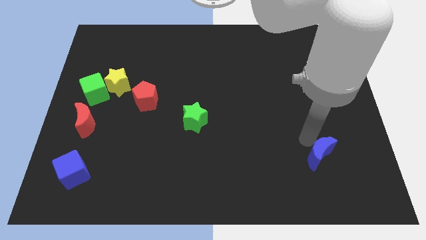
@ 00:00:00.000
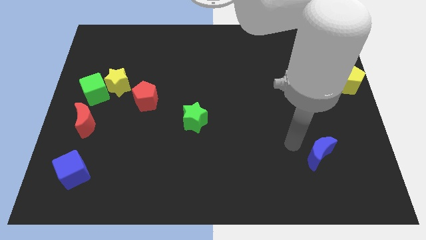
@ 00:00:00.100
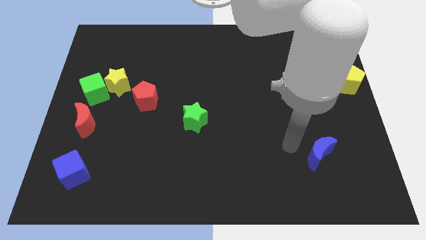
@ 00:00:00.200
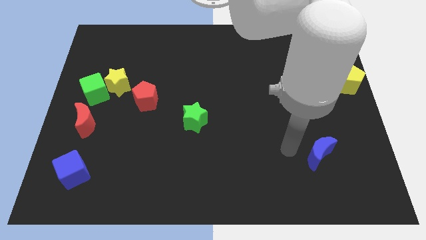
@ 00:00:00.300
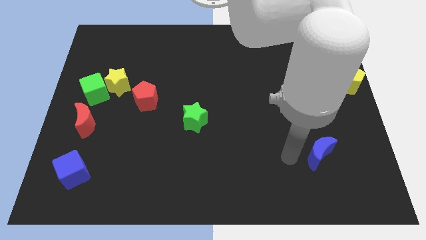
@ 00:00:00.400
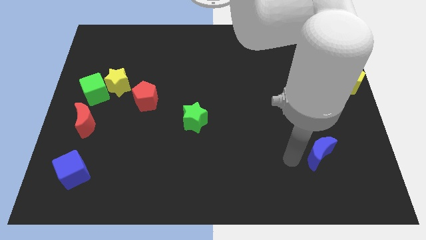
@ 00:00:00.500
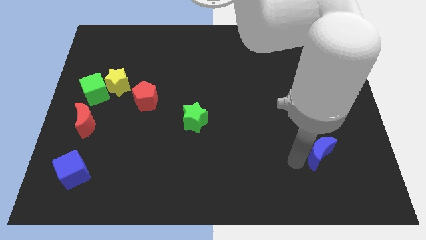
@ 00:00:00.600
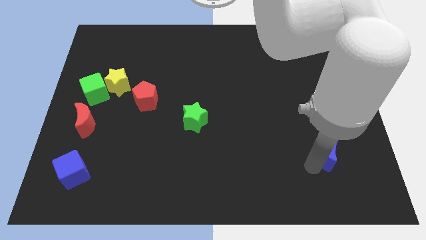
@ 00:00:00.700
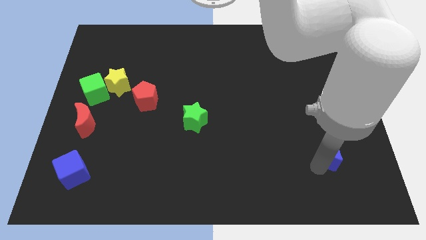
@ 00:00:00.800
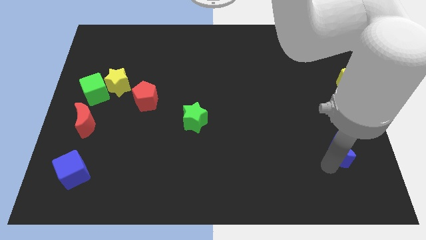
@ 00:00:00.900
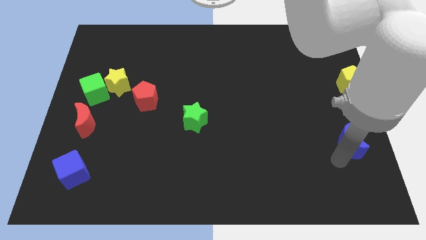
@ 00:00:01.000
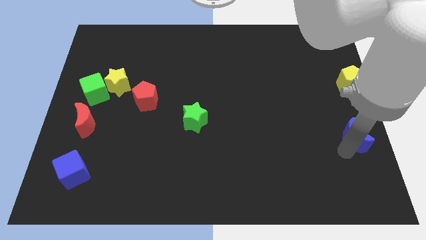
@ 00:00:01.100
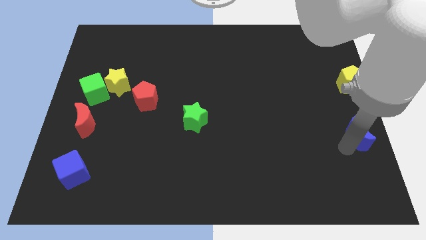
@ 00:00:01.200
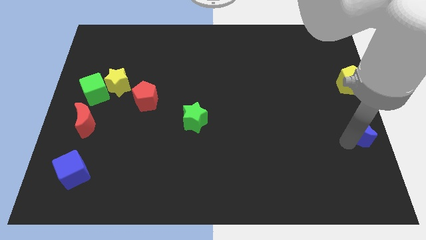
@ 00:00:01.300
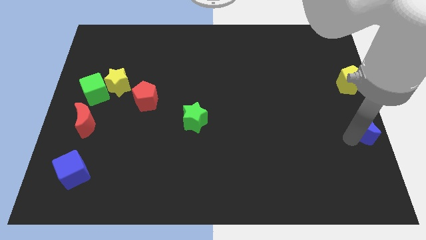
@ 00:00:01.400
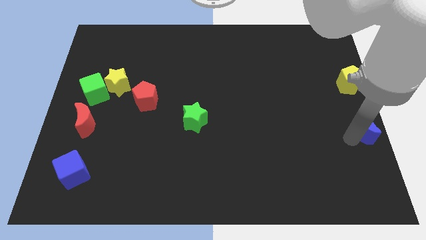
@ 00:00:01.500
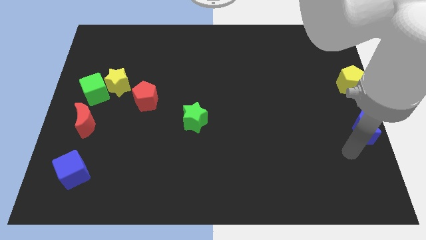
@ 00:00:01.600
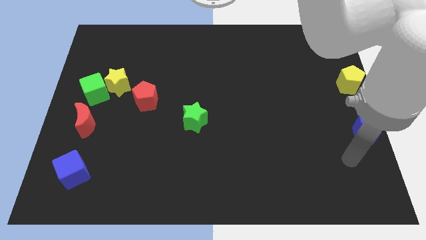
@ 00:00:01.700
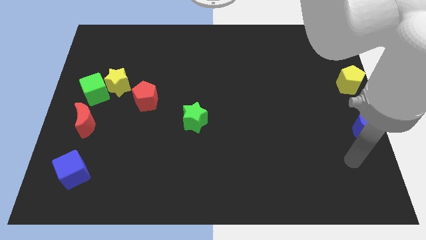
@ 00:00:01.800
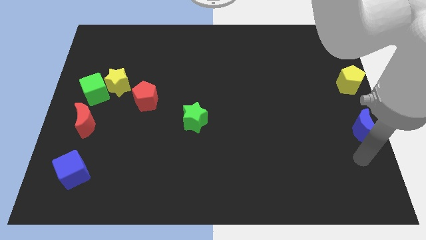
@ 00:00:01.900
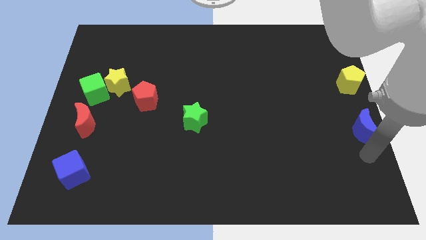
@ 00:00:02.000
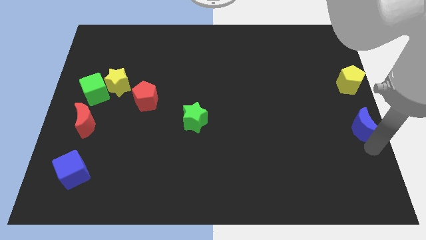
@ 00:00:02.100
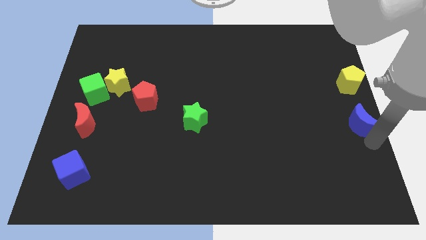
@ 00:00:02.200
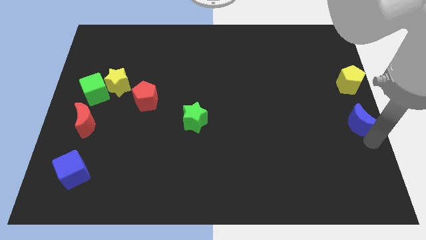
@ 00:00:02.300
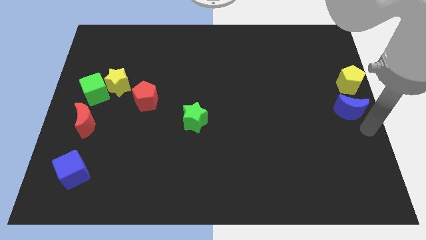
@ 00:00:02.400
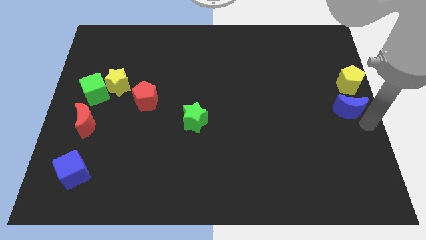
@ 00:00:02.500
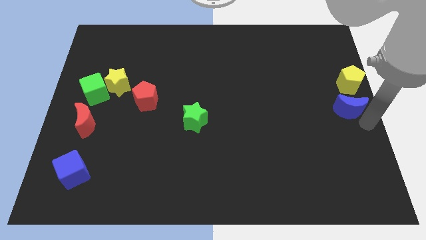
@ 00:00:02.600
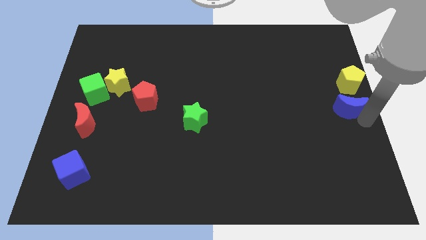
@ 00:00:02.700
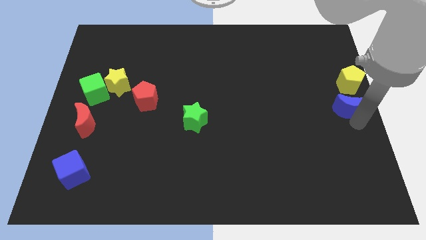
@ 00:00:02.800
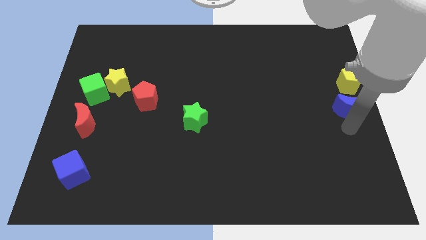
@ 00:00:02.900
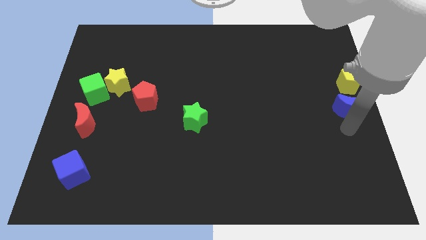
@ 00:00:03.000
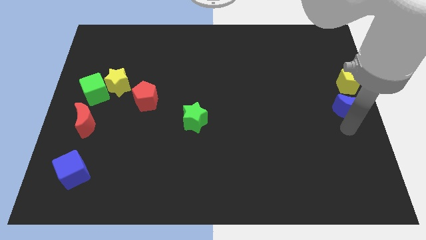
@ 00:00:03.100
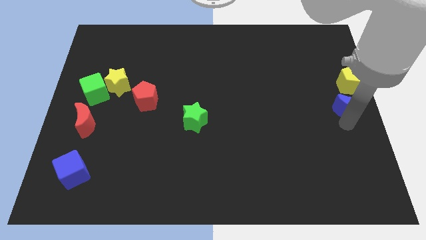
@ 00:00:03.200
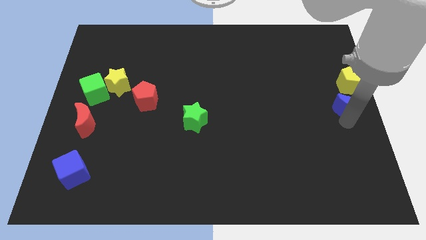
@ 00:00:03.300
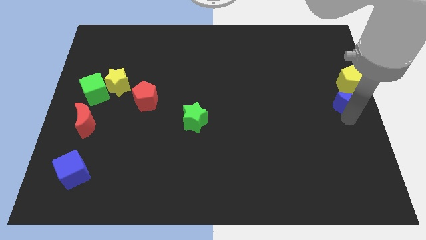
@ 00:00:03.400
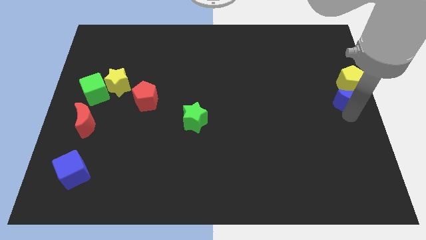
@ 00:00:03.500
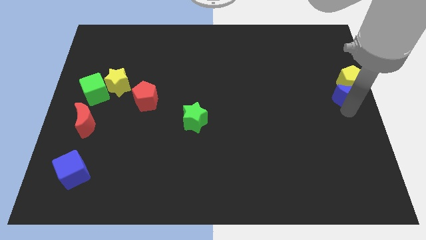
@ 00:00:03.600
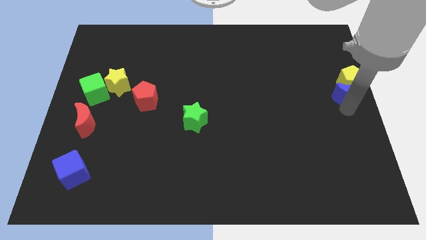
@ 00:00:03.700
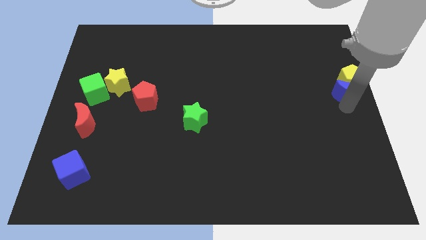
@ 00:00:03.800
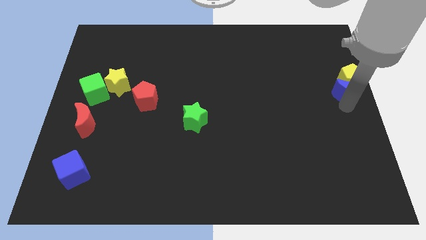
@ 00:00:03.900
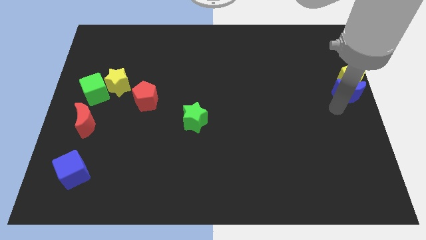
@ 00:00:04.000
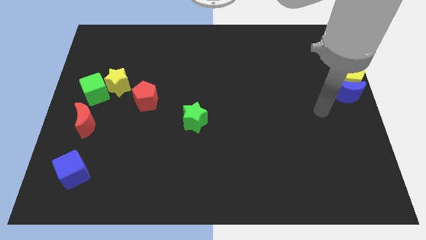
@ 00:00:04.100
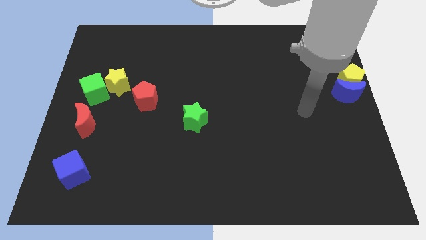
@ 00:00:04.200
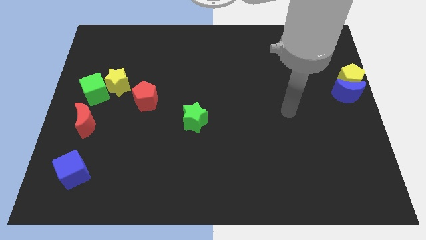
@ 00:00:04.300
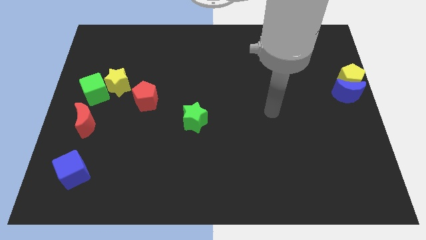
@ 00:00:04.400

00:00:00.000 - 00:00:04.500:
move blue moon into the yellow pentagon

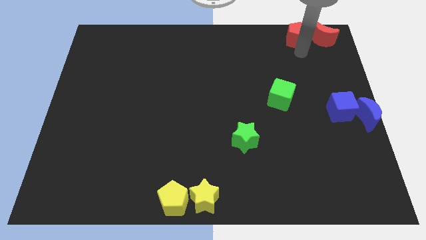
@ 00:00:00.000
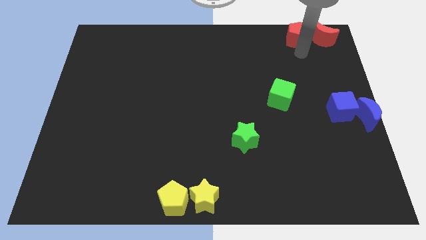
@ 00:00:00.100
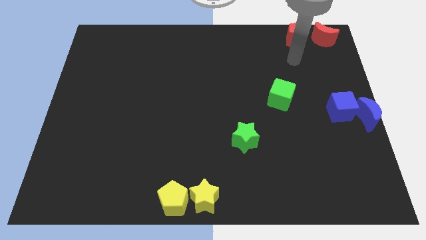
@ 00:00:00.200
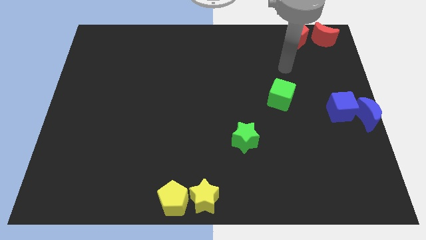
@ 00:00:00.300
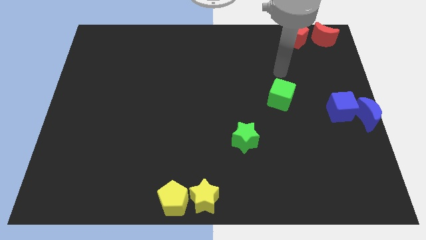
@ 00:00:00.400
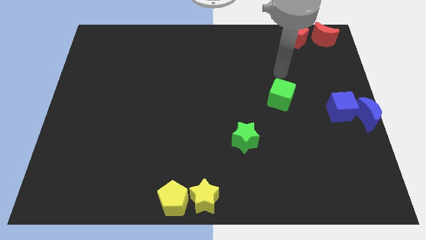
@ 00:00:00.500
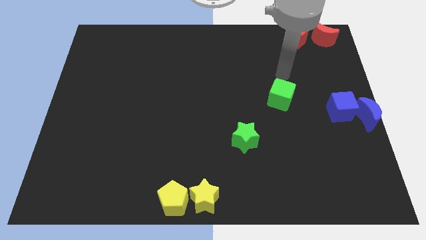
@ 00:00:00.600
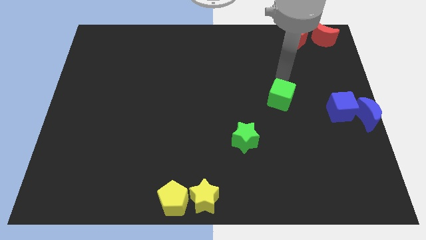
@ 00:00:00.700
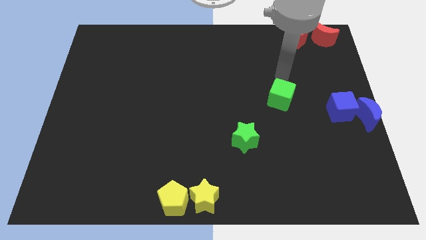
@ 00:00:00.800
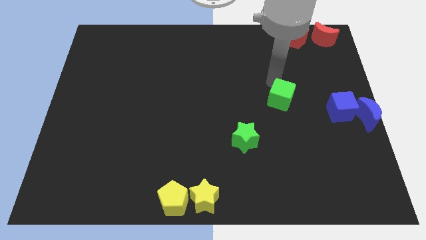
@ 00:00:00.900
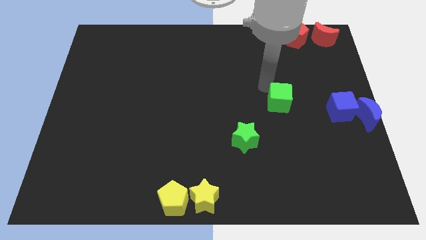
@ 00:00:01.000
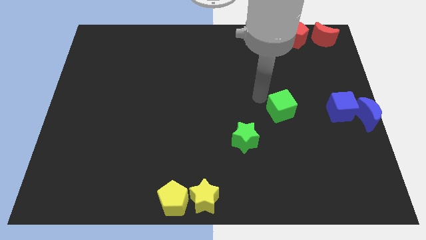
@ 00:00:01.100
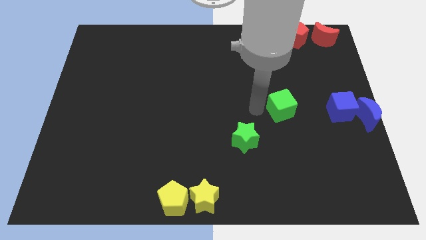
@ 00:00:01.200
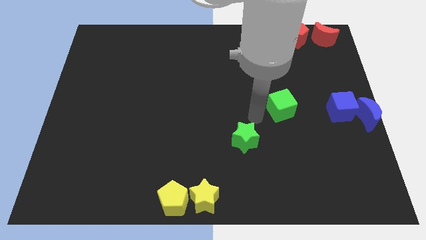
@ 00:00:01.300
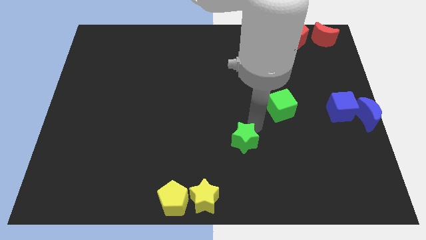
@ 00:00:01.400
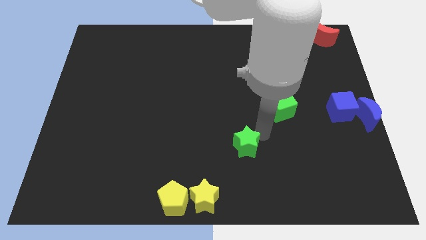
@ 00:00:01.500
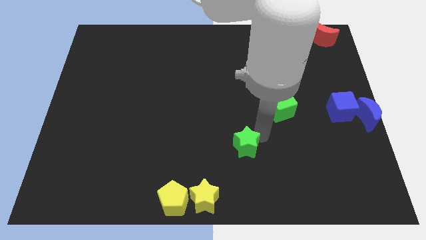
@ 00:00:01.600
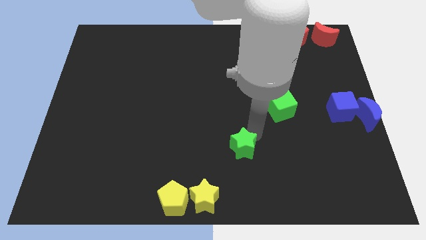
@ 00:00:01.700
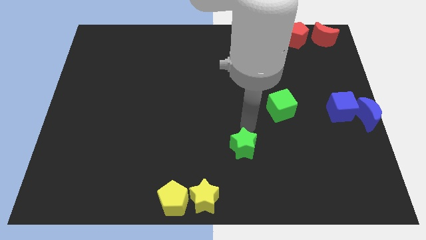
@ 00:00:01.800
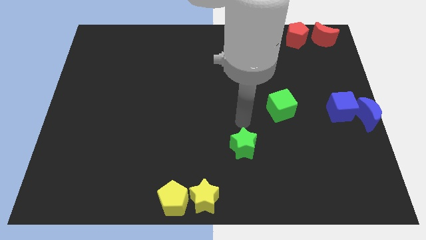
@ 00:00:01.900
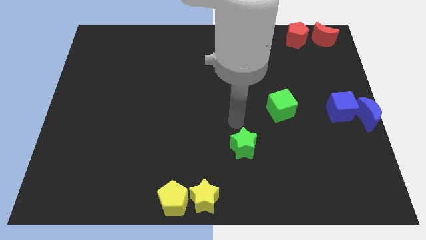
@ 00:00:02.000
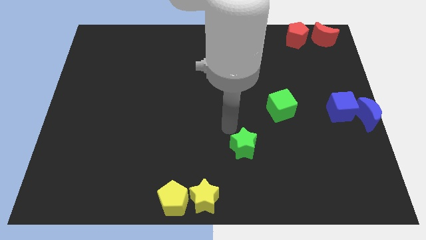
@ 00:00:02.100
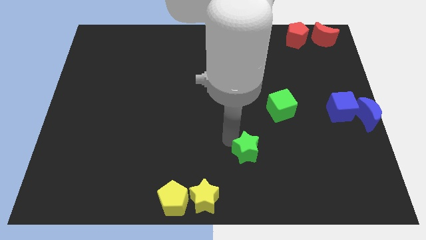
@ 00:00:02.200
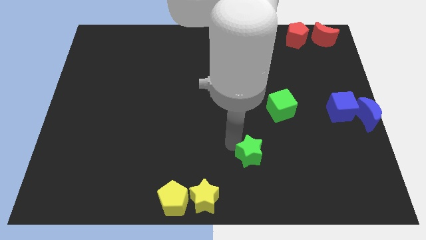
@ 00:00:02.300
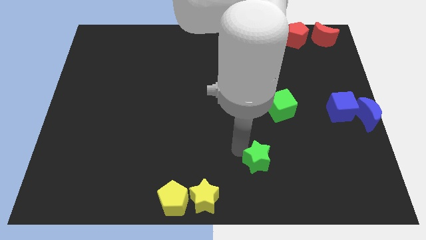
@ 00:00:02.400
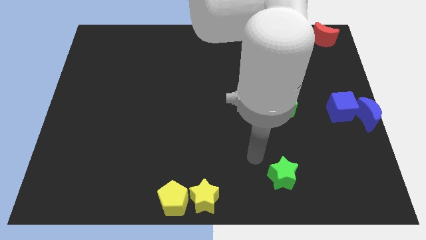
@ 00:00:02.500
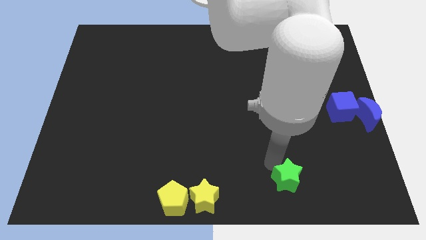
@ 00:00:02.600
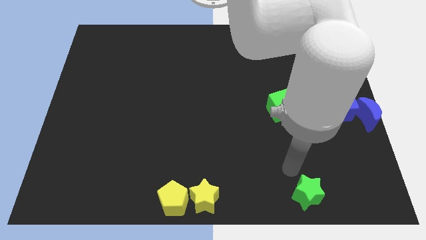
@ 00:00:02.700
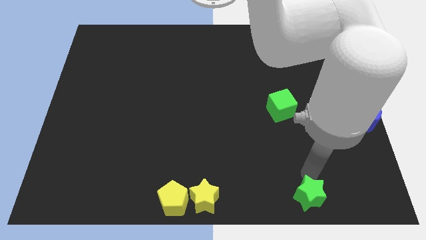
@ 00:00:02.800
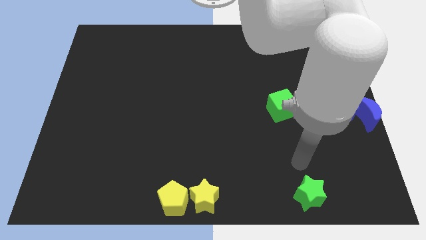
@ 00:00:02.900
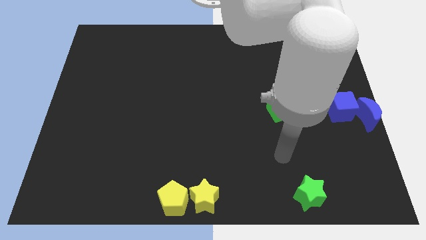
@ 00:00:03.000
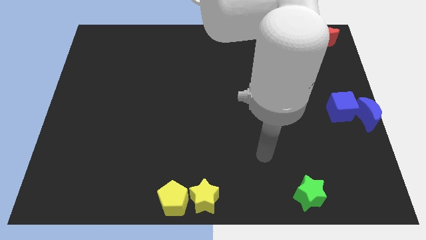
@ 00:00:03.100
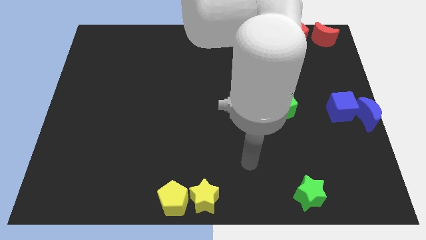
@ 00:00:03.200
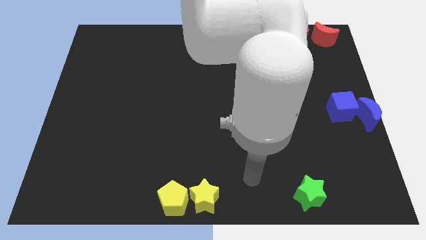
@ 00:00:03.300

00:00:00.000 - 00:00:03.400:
move the green star towards the bottom

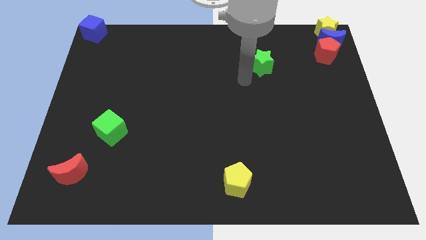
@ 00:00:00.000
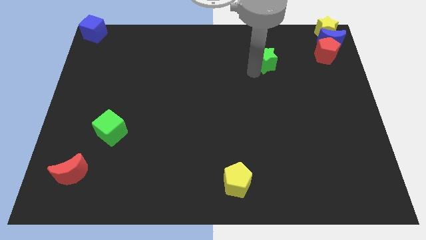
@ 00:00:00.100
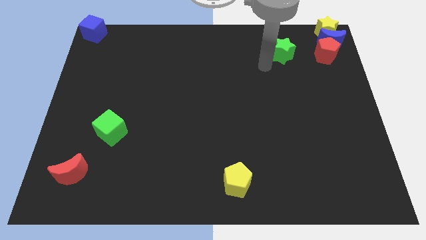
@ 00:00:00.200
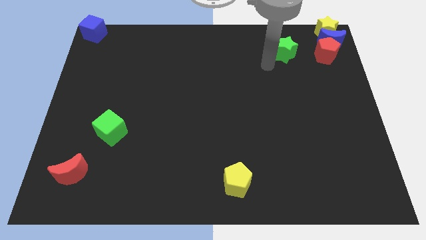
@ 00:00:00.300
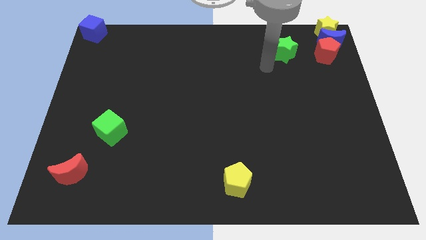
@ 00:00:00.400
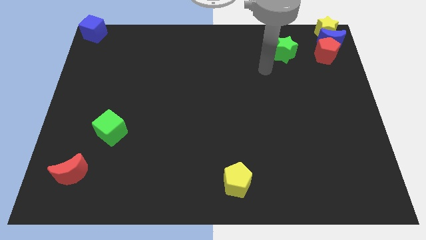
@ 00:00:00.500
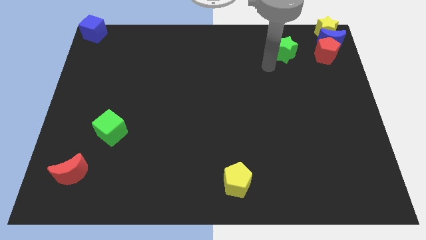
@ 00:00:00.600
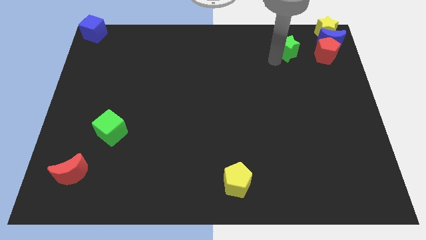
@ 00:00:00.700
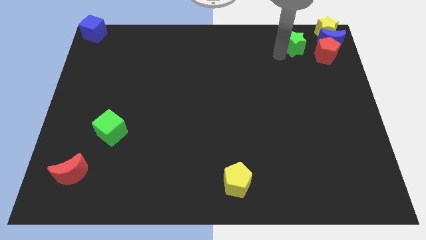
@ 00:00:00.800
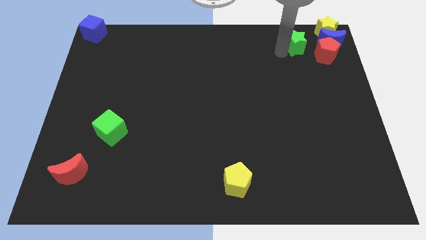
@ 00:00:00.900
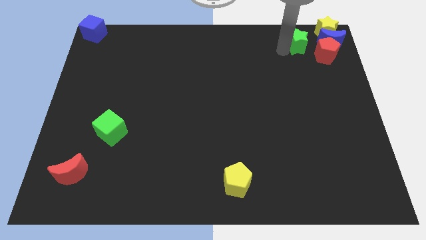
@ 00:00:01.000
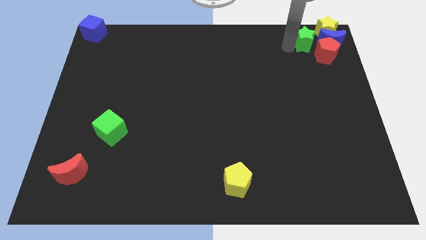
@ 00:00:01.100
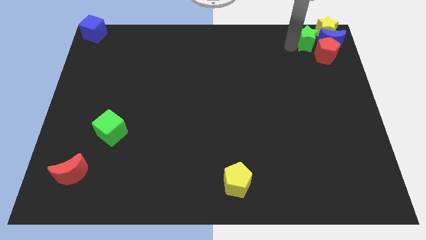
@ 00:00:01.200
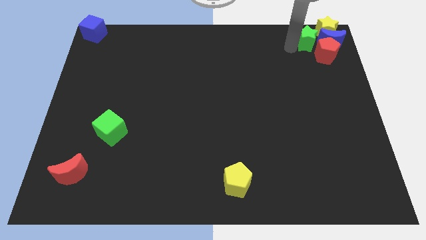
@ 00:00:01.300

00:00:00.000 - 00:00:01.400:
push the green star close to the group of blocks at the top right corner of the board
